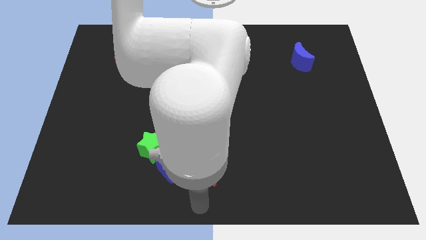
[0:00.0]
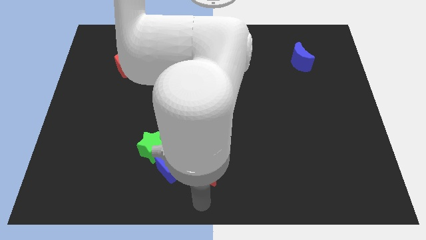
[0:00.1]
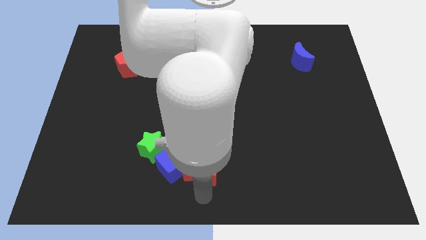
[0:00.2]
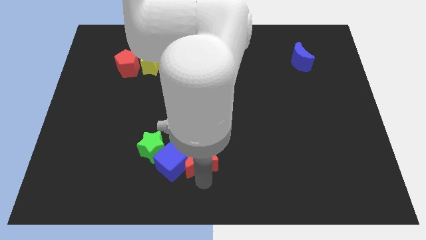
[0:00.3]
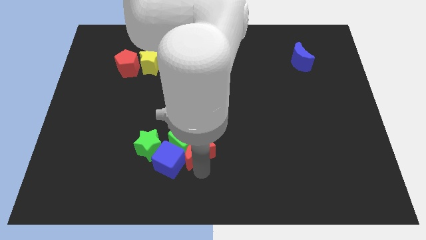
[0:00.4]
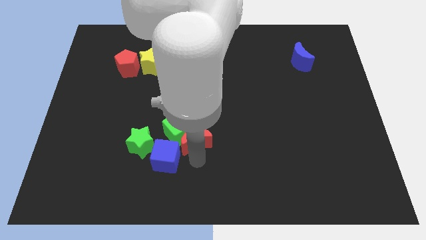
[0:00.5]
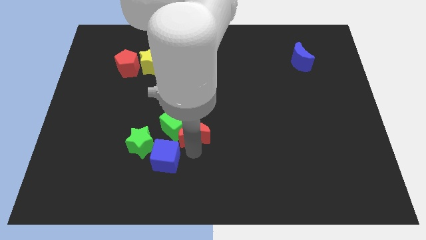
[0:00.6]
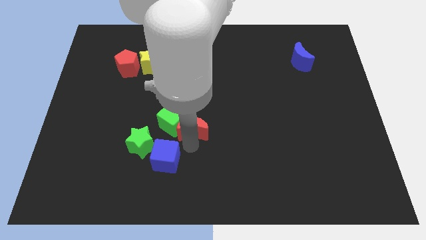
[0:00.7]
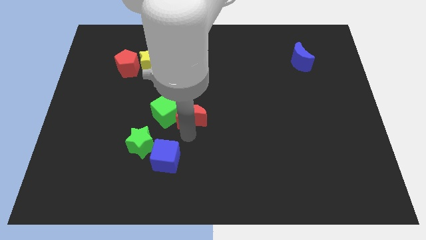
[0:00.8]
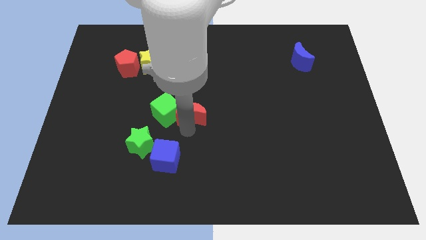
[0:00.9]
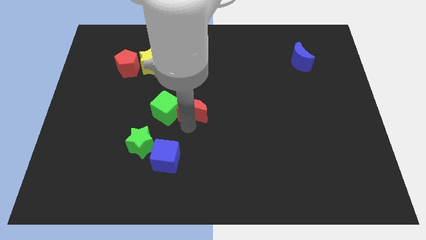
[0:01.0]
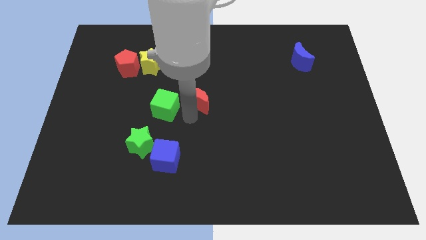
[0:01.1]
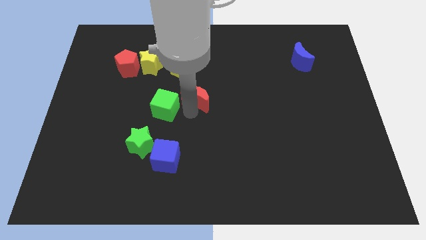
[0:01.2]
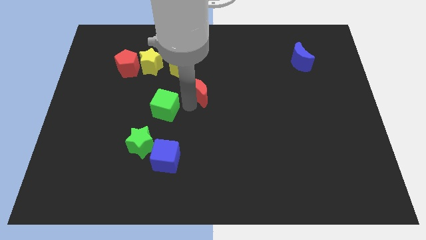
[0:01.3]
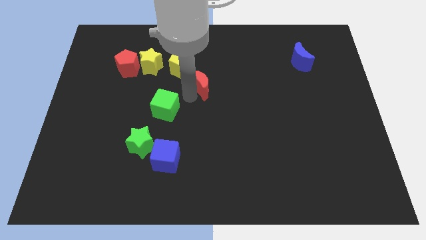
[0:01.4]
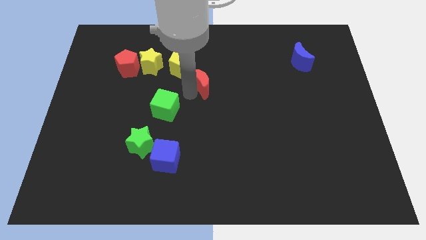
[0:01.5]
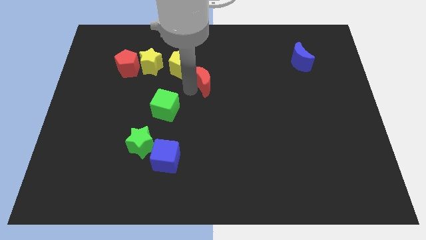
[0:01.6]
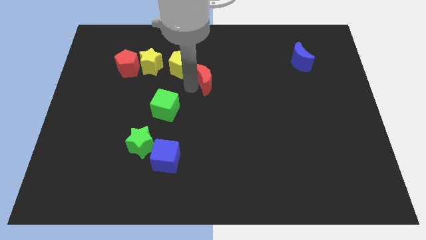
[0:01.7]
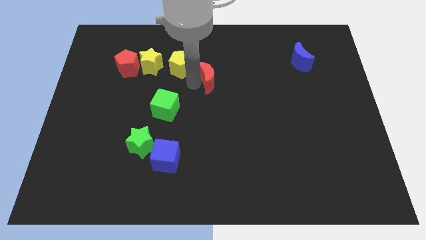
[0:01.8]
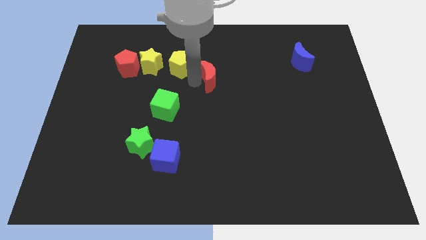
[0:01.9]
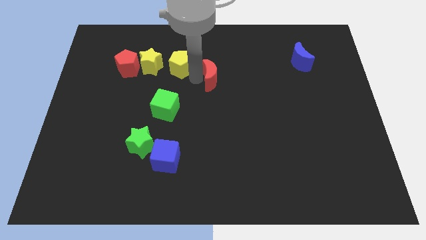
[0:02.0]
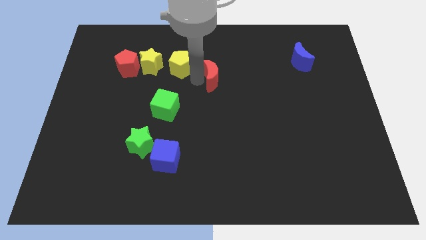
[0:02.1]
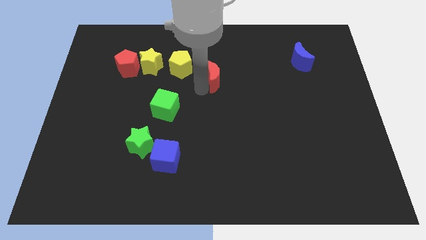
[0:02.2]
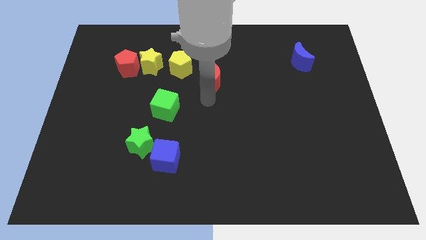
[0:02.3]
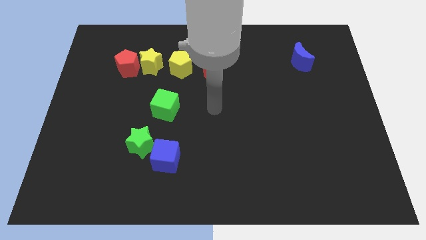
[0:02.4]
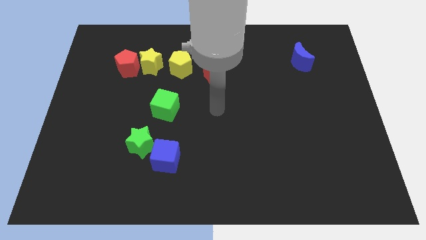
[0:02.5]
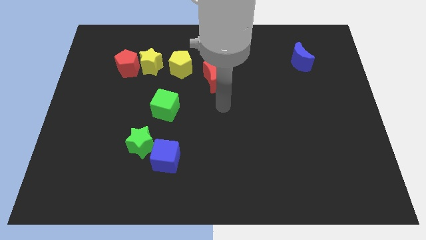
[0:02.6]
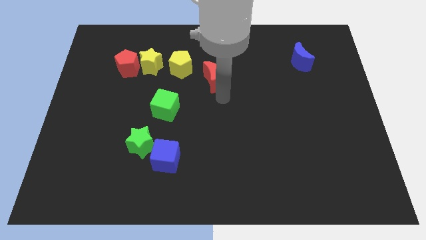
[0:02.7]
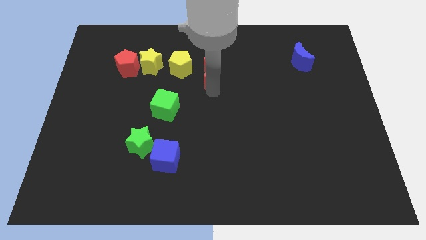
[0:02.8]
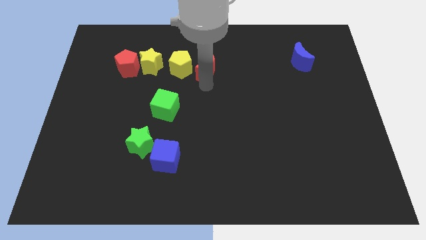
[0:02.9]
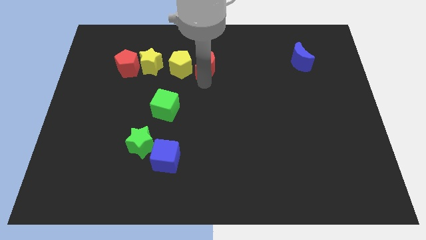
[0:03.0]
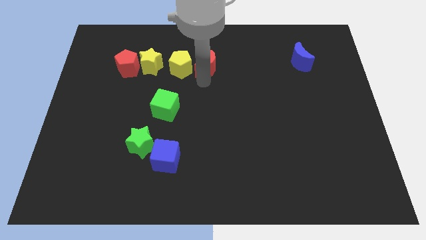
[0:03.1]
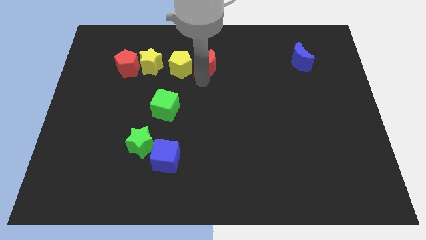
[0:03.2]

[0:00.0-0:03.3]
move the red crescent to the right of the yellow pentagon

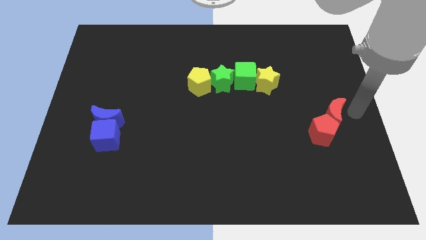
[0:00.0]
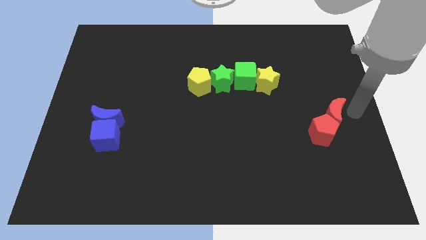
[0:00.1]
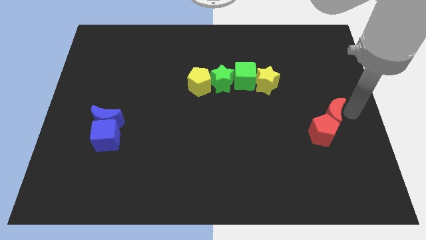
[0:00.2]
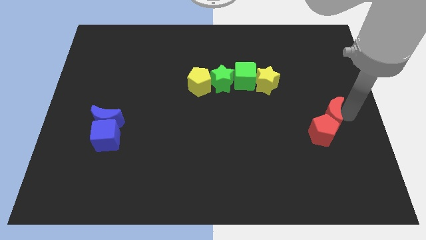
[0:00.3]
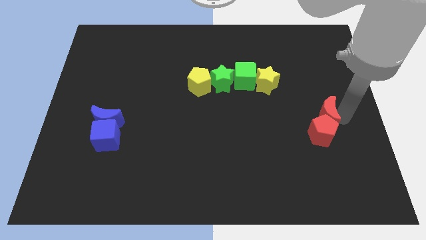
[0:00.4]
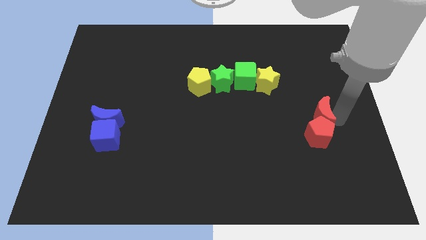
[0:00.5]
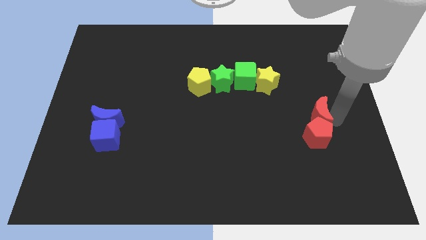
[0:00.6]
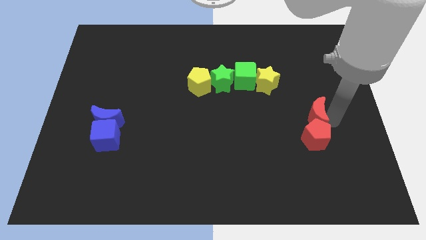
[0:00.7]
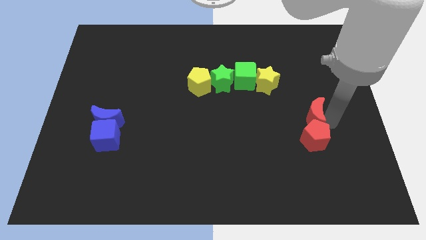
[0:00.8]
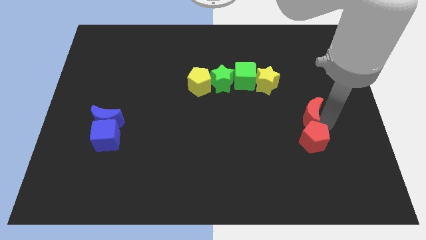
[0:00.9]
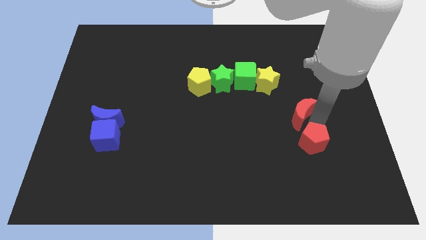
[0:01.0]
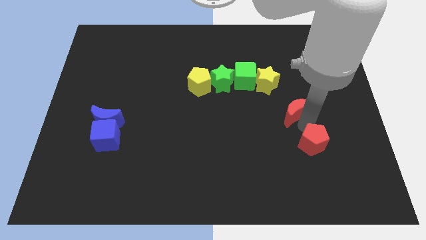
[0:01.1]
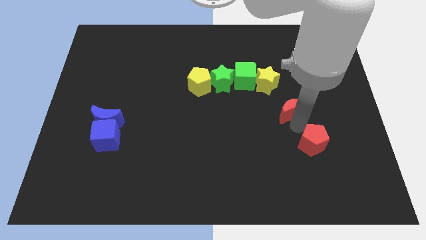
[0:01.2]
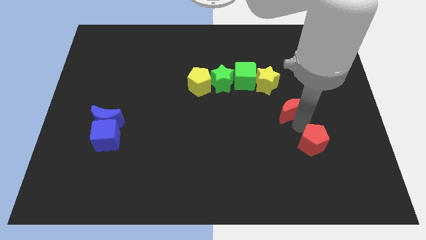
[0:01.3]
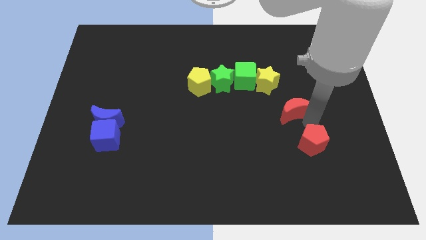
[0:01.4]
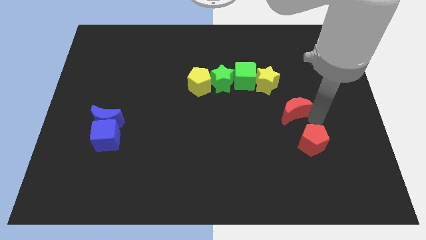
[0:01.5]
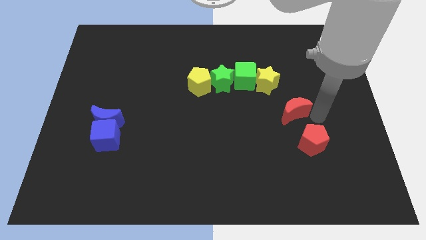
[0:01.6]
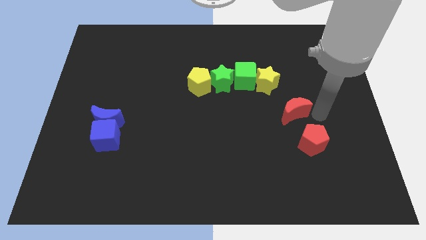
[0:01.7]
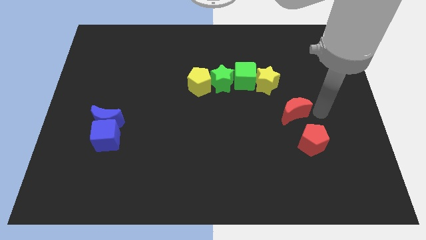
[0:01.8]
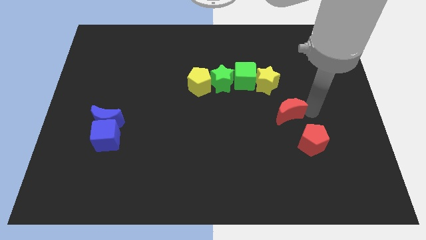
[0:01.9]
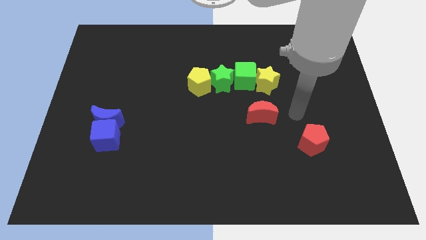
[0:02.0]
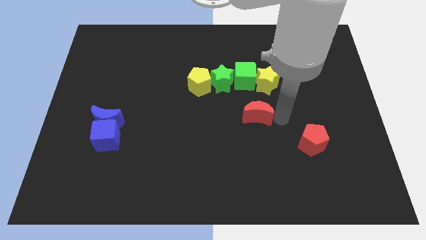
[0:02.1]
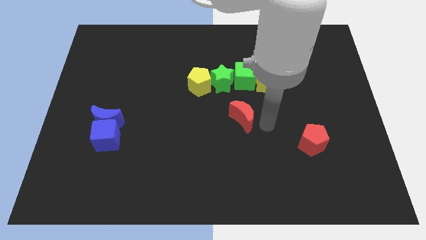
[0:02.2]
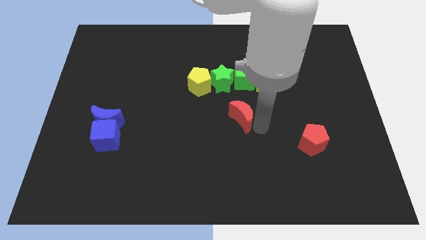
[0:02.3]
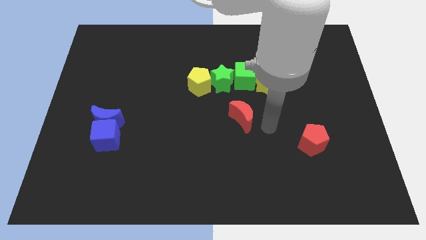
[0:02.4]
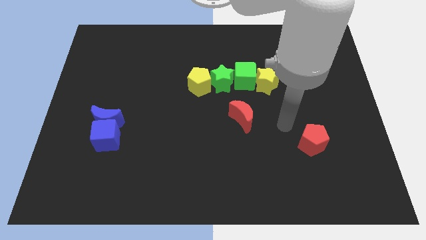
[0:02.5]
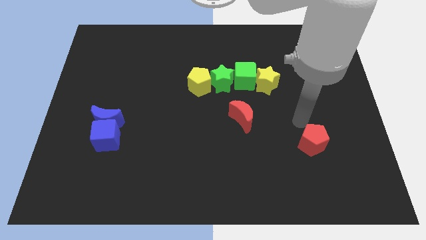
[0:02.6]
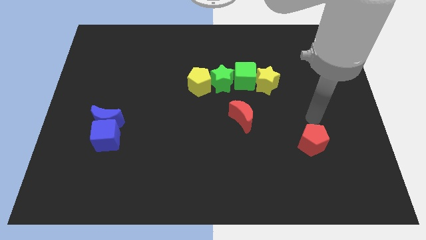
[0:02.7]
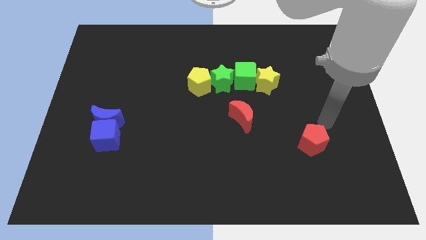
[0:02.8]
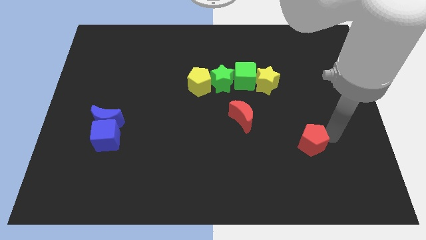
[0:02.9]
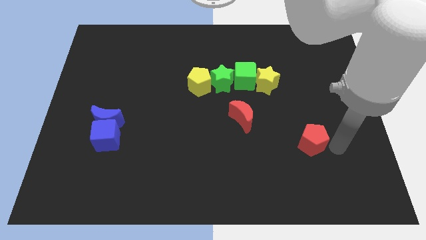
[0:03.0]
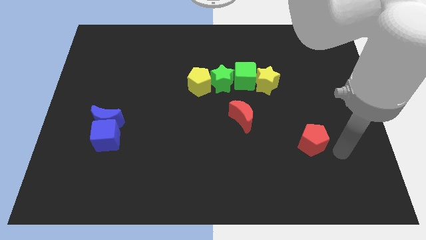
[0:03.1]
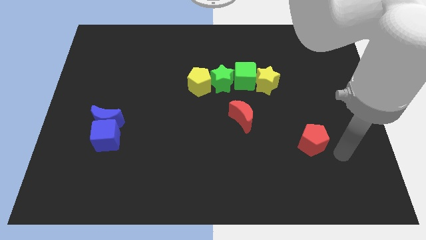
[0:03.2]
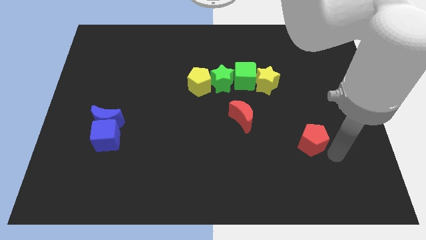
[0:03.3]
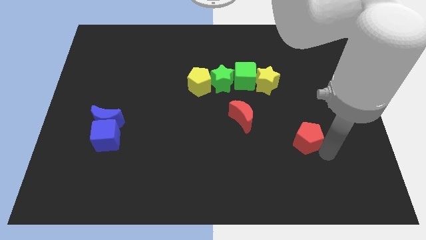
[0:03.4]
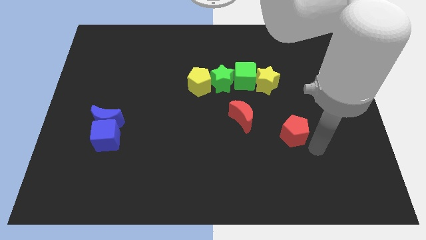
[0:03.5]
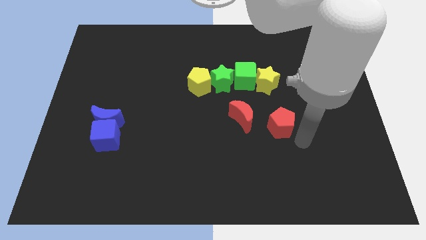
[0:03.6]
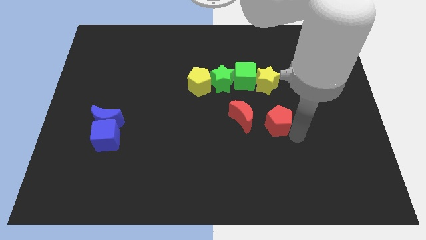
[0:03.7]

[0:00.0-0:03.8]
put the red moon on the bottom side of the green cube

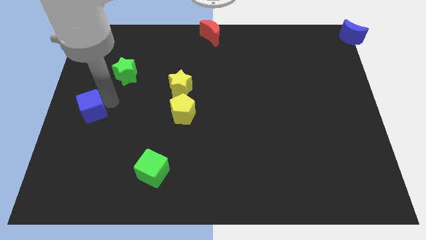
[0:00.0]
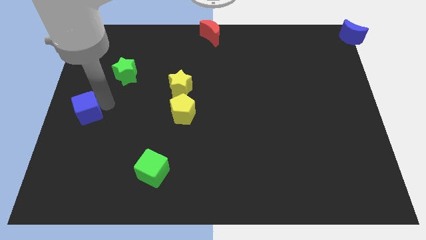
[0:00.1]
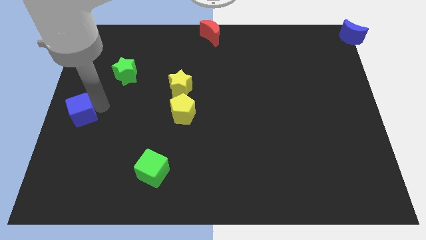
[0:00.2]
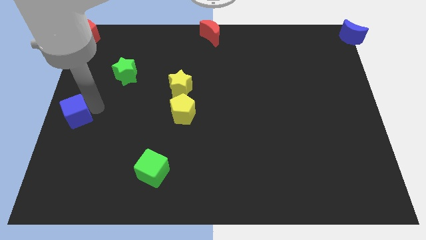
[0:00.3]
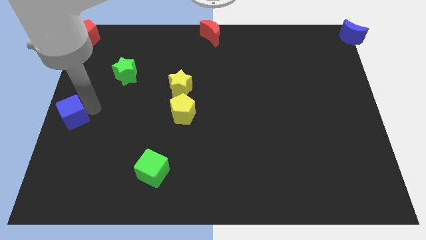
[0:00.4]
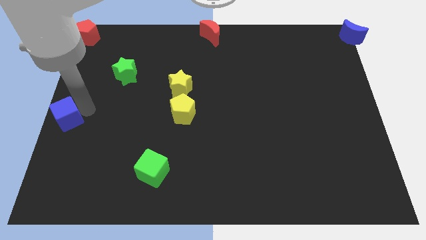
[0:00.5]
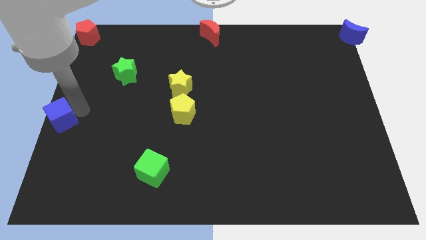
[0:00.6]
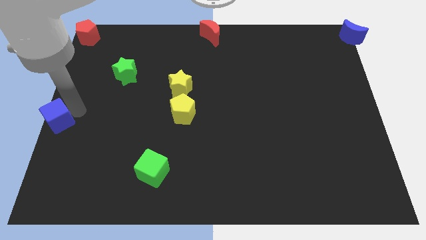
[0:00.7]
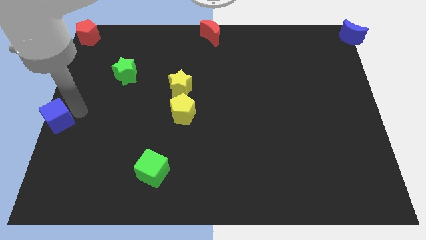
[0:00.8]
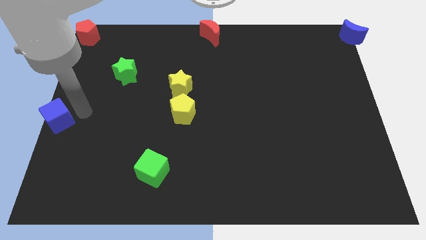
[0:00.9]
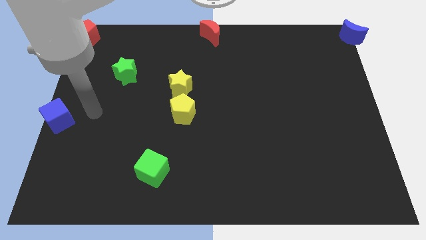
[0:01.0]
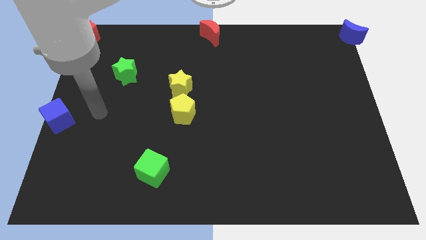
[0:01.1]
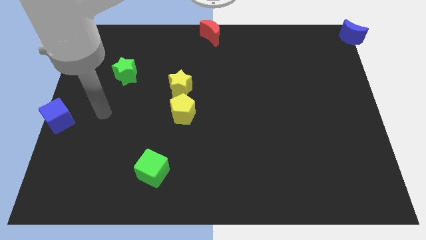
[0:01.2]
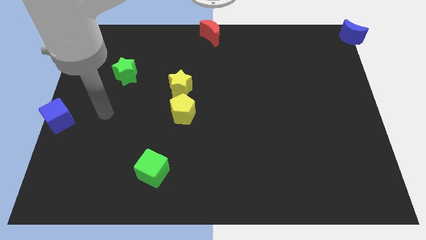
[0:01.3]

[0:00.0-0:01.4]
place the blue cube at the center left side of the board

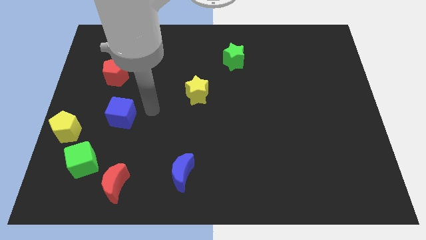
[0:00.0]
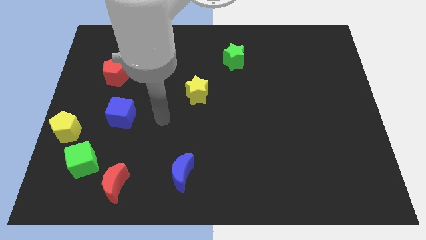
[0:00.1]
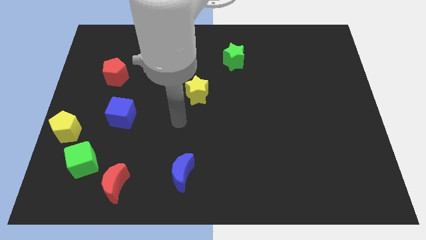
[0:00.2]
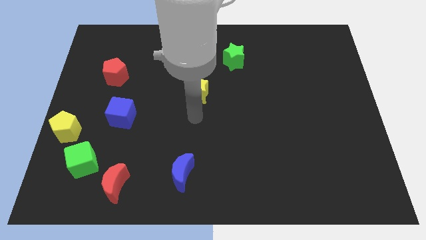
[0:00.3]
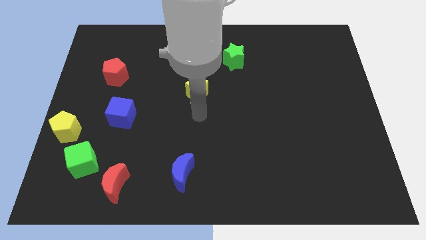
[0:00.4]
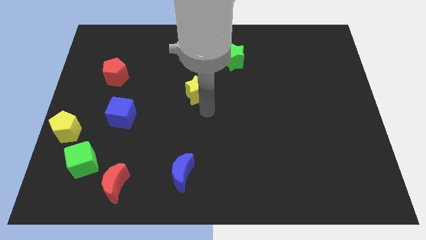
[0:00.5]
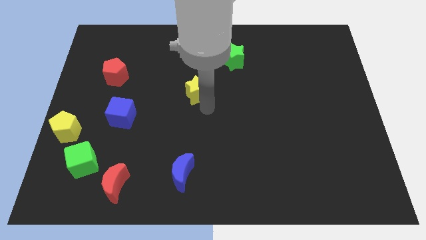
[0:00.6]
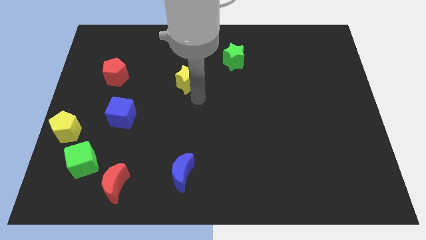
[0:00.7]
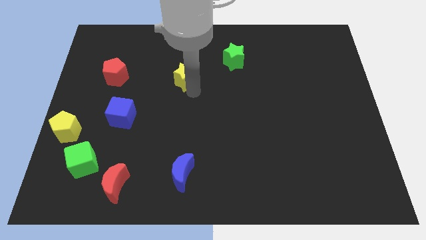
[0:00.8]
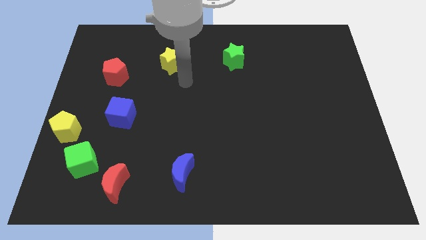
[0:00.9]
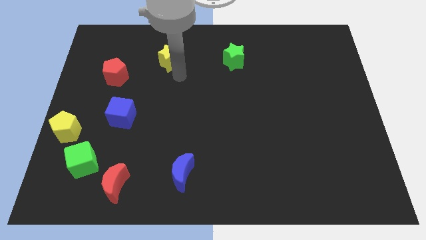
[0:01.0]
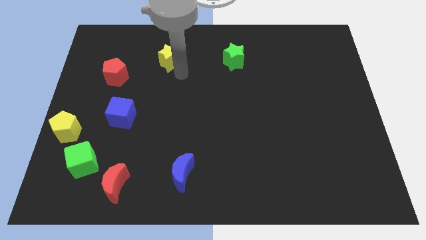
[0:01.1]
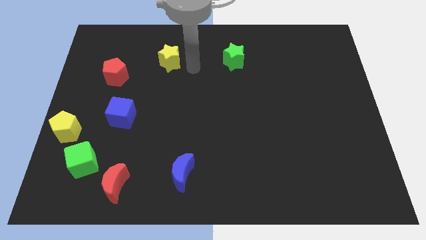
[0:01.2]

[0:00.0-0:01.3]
move the yellow star to the left of the green star
